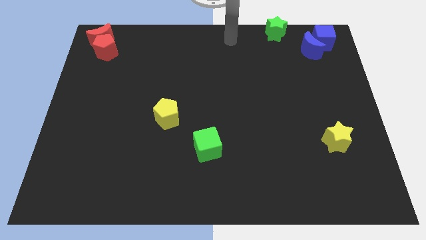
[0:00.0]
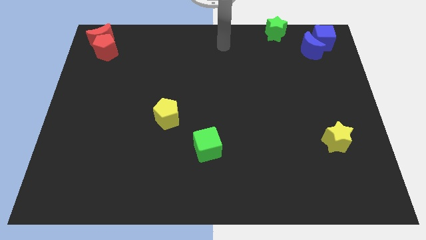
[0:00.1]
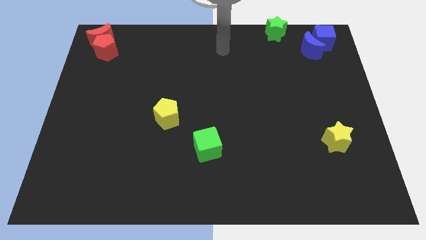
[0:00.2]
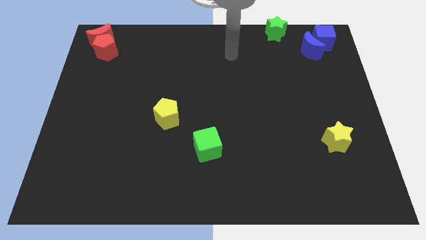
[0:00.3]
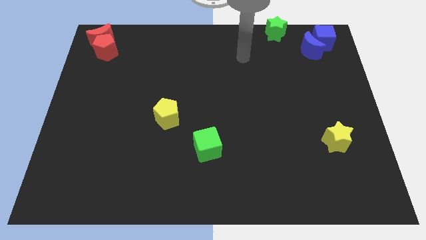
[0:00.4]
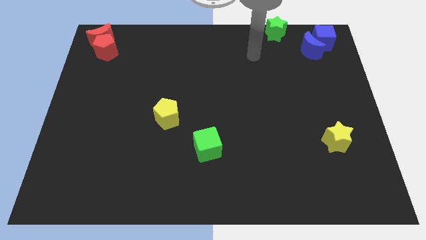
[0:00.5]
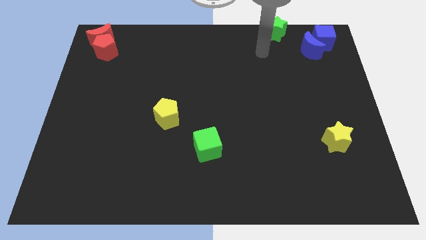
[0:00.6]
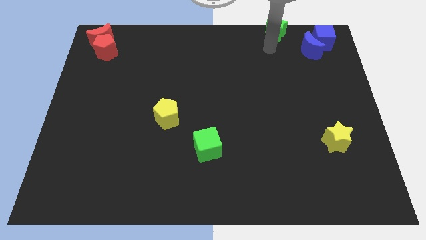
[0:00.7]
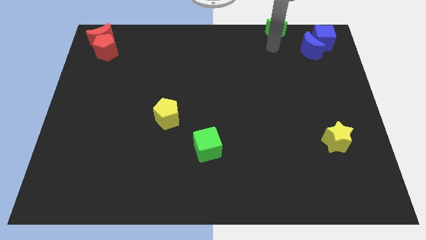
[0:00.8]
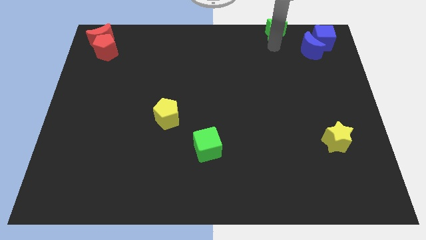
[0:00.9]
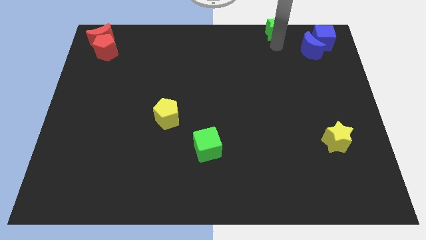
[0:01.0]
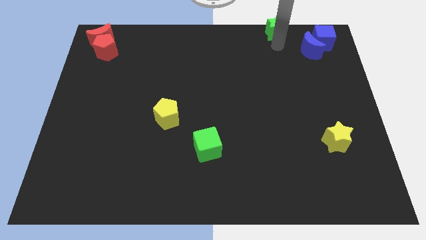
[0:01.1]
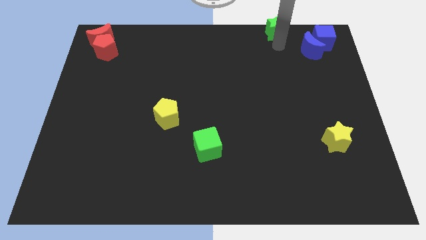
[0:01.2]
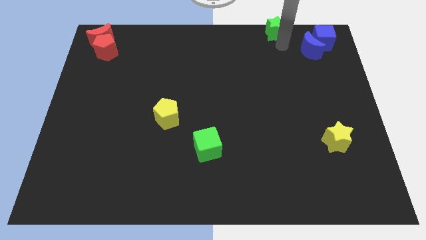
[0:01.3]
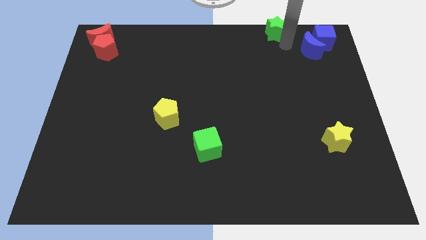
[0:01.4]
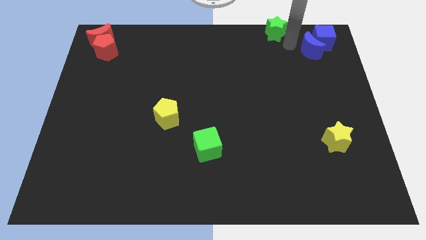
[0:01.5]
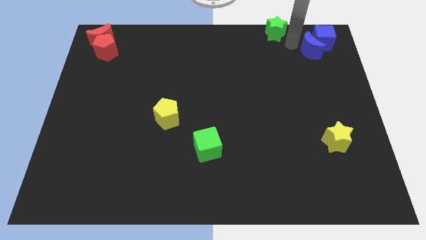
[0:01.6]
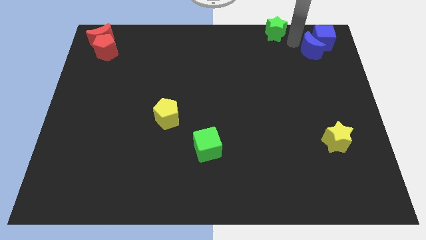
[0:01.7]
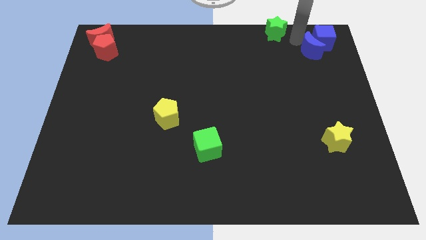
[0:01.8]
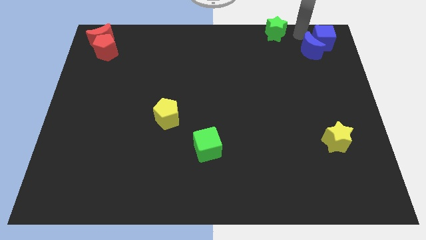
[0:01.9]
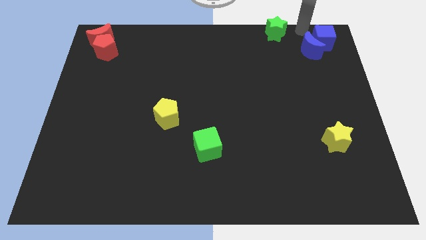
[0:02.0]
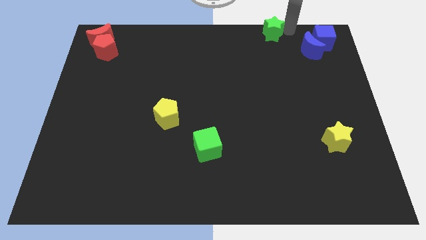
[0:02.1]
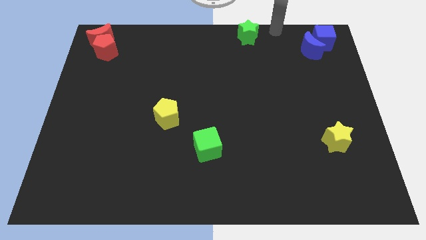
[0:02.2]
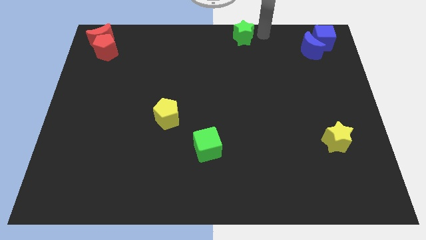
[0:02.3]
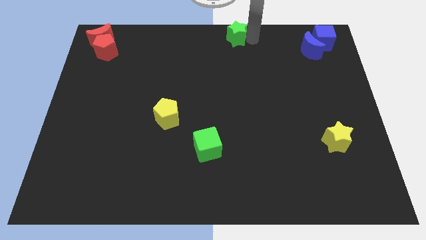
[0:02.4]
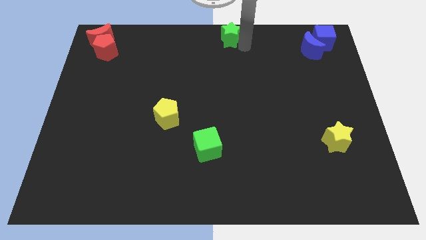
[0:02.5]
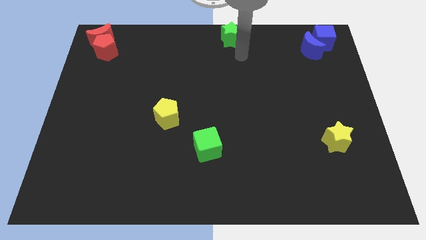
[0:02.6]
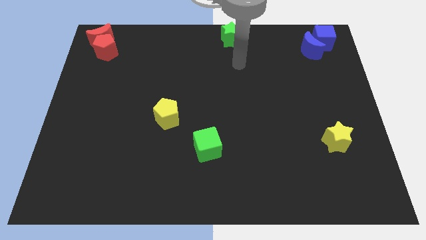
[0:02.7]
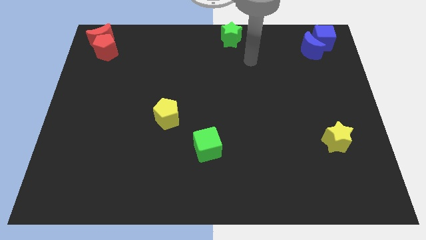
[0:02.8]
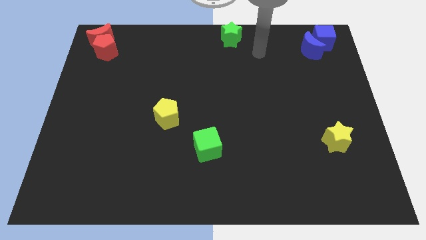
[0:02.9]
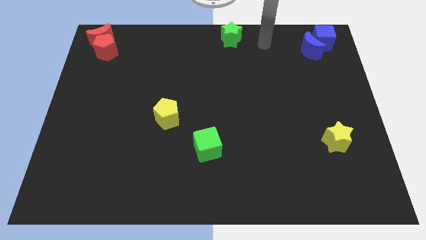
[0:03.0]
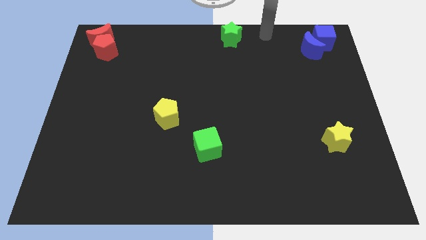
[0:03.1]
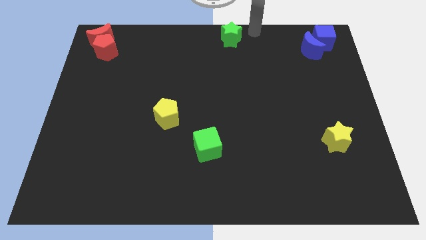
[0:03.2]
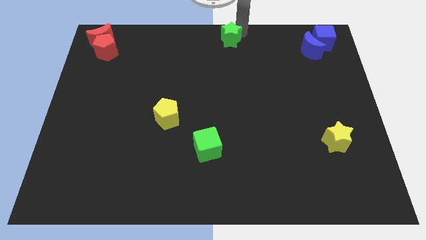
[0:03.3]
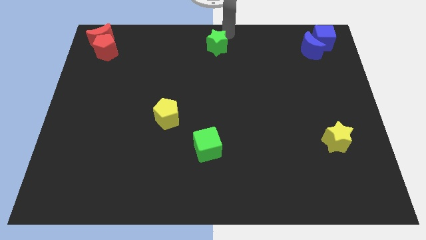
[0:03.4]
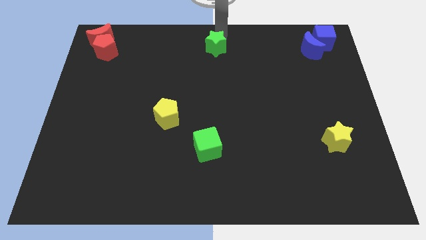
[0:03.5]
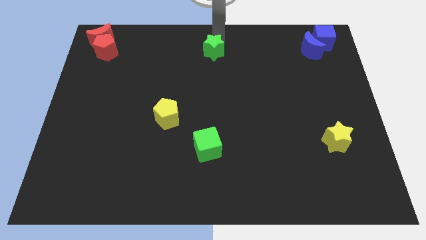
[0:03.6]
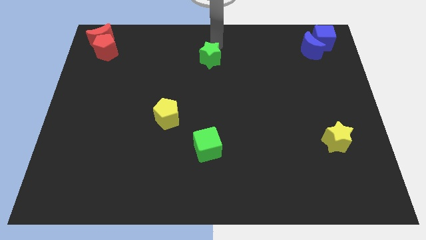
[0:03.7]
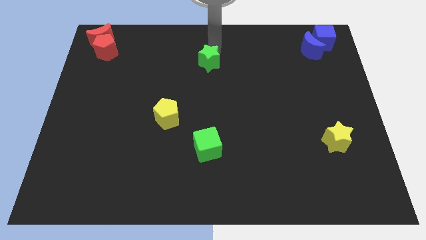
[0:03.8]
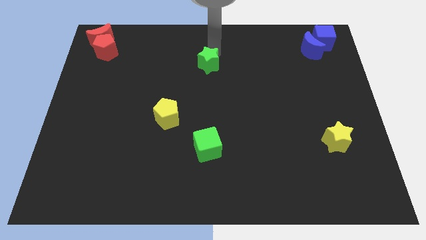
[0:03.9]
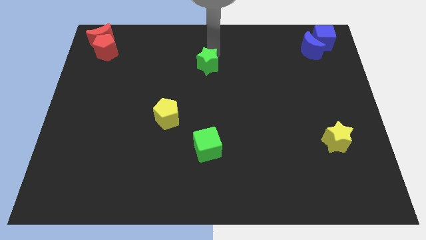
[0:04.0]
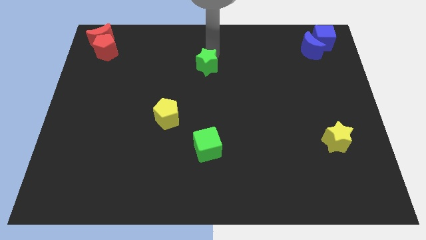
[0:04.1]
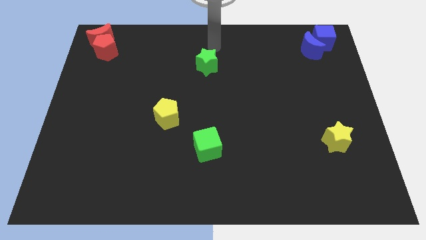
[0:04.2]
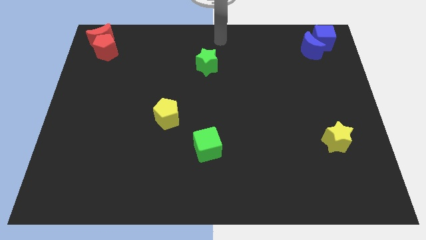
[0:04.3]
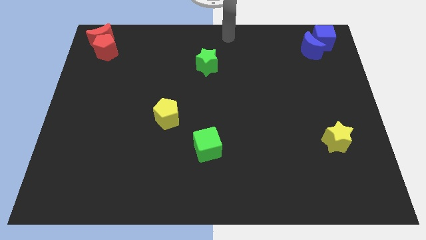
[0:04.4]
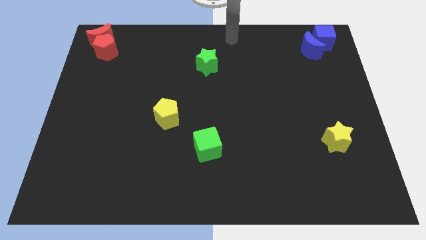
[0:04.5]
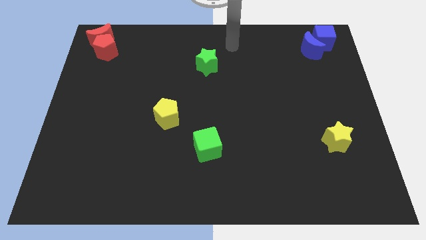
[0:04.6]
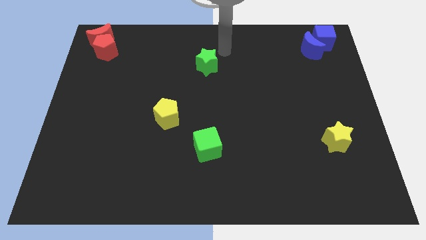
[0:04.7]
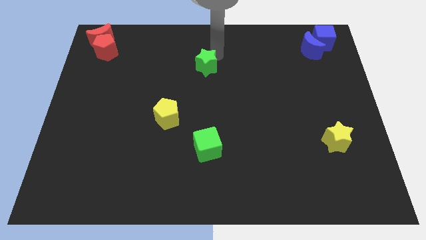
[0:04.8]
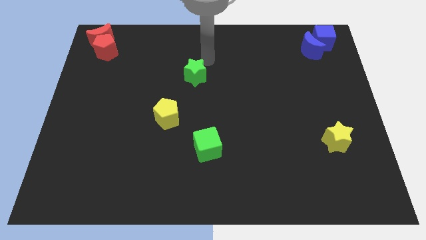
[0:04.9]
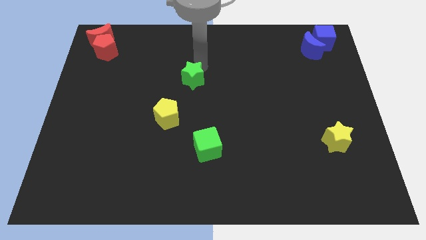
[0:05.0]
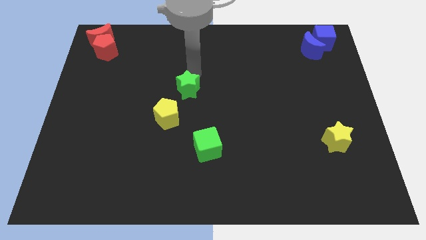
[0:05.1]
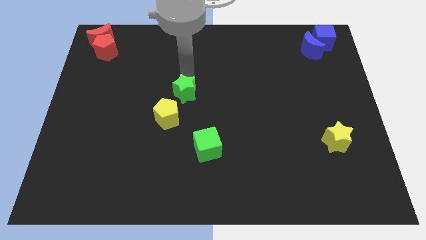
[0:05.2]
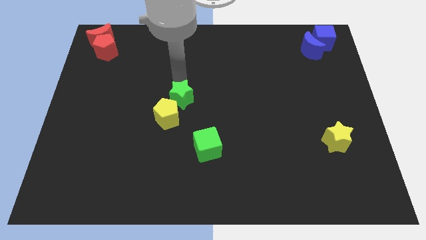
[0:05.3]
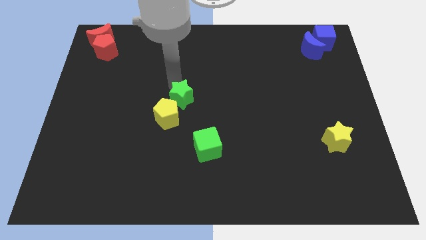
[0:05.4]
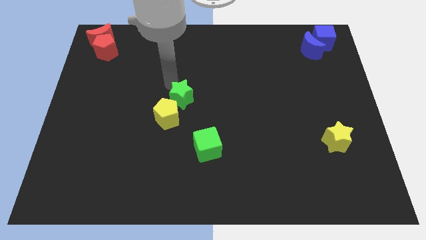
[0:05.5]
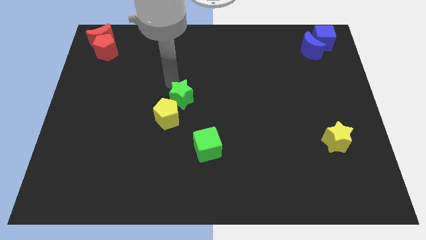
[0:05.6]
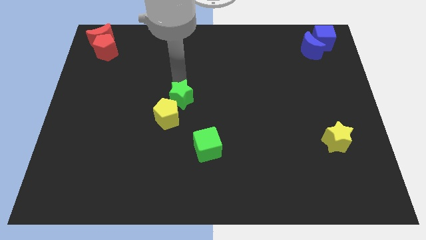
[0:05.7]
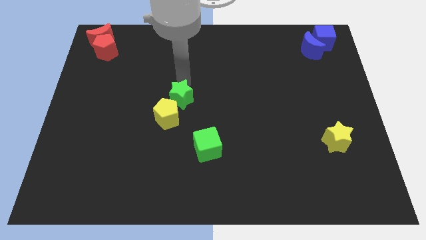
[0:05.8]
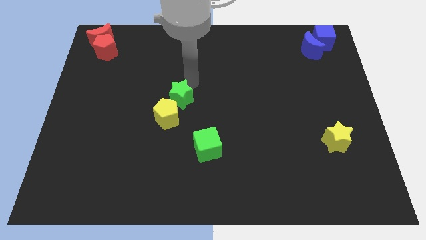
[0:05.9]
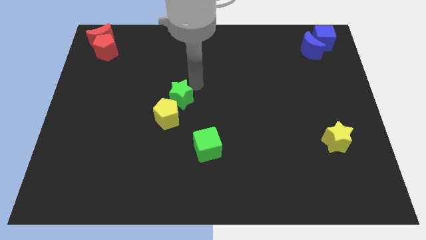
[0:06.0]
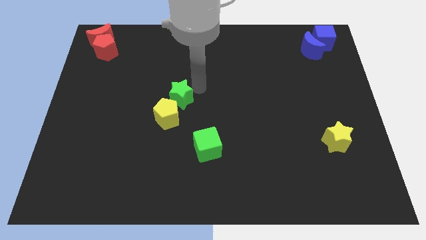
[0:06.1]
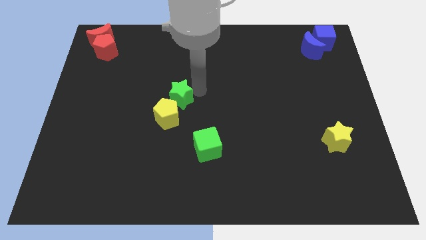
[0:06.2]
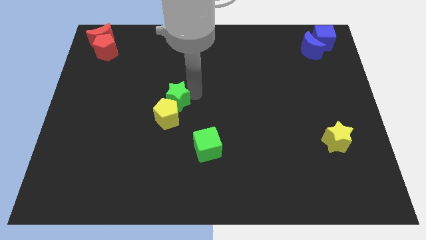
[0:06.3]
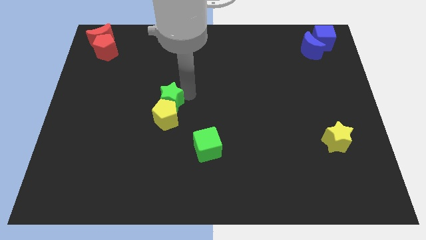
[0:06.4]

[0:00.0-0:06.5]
push the green star into the yellow pentagon

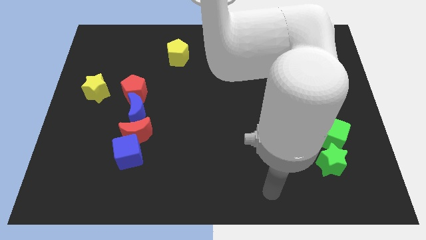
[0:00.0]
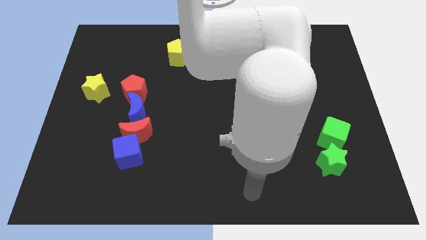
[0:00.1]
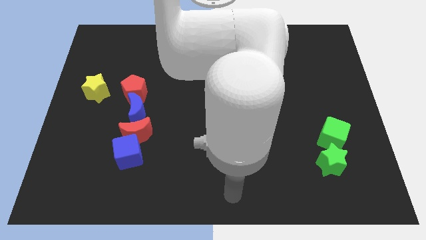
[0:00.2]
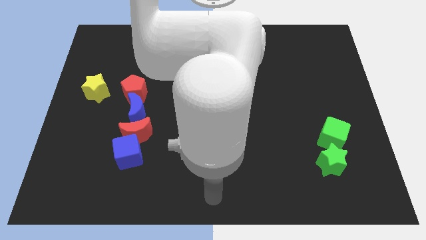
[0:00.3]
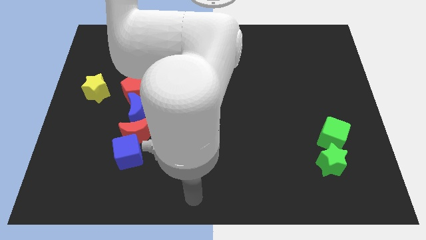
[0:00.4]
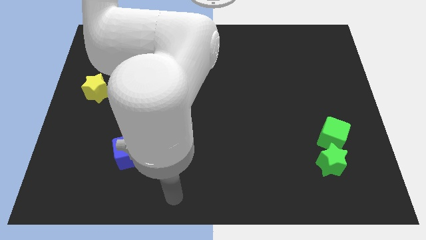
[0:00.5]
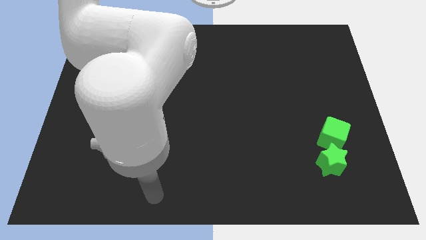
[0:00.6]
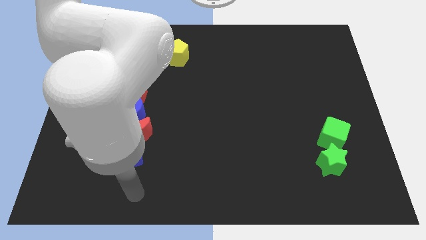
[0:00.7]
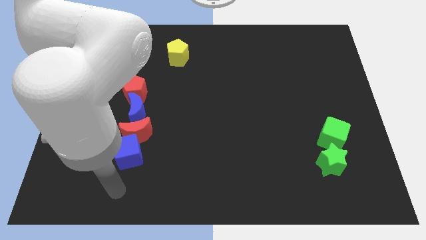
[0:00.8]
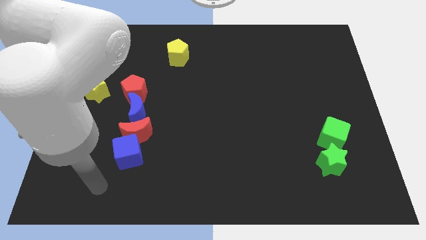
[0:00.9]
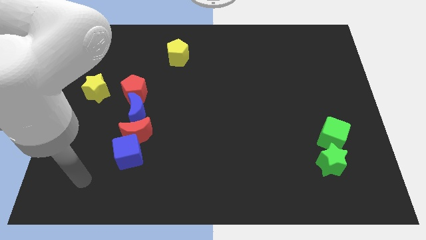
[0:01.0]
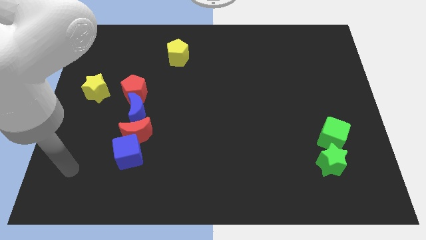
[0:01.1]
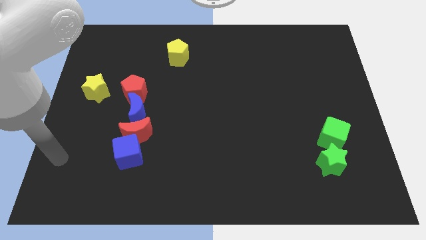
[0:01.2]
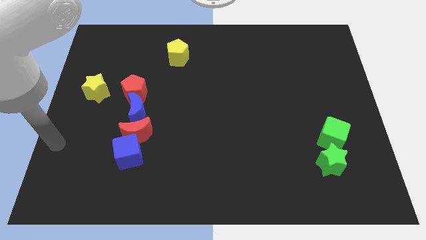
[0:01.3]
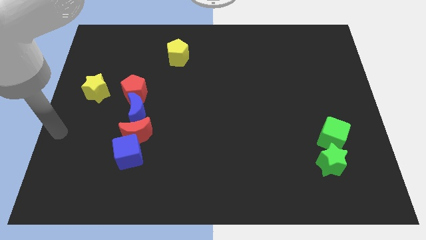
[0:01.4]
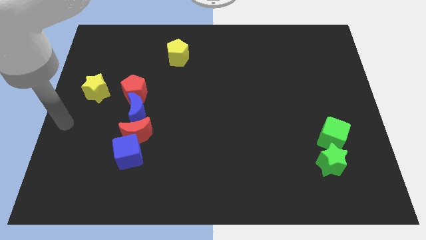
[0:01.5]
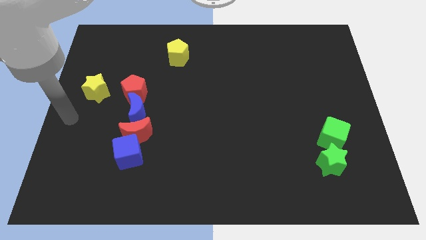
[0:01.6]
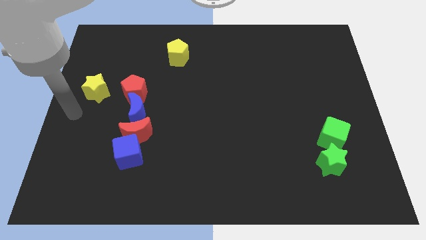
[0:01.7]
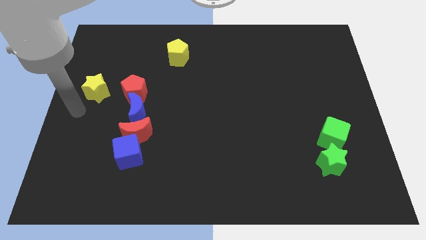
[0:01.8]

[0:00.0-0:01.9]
point your arm at the bottom left of the yellow star

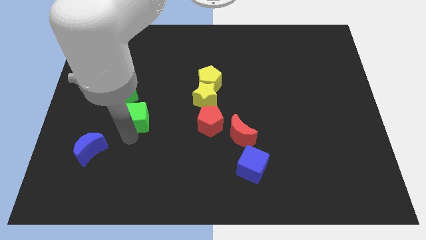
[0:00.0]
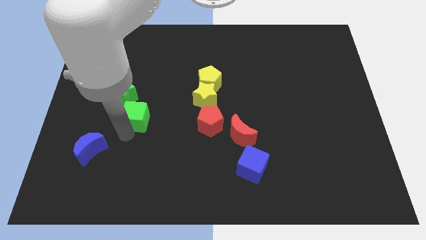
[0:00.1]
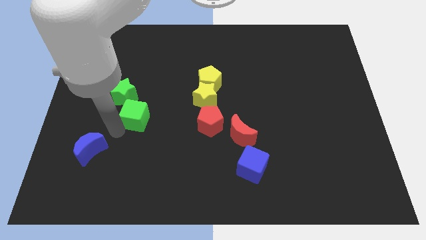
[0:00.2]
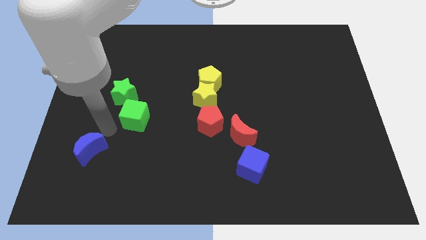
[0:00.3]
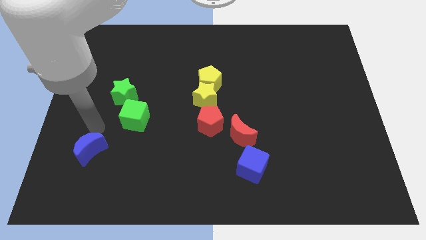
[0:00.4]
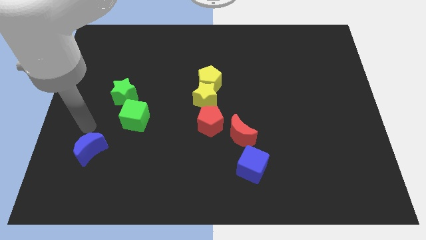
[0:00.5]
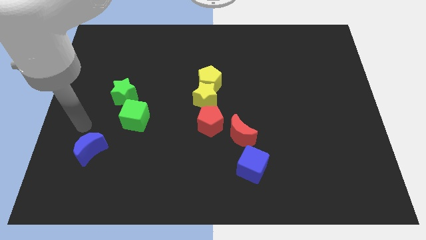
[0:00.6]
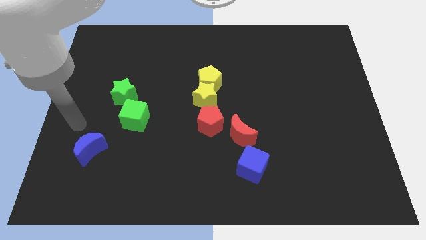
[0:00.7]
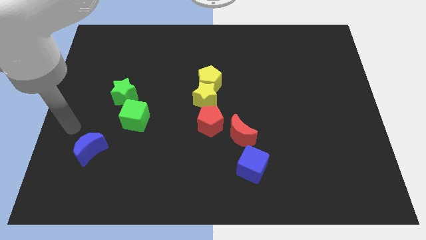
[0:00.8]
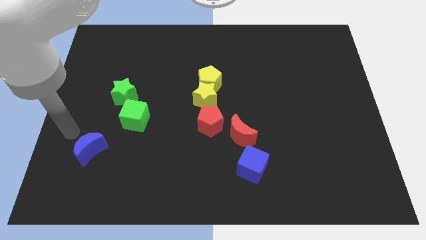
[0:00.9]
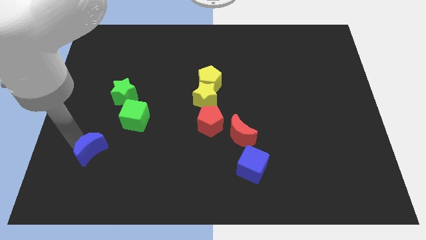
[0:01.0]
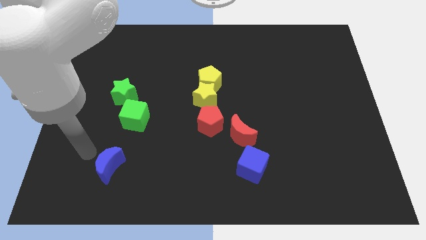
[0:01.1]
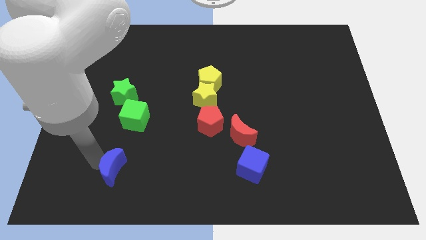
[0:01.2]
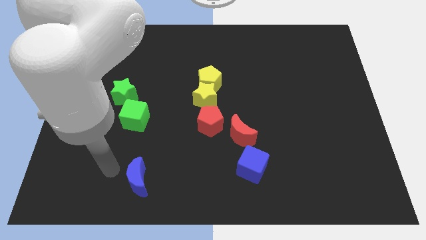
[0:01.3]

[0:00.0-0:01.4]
place blue moon at the bottom of the green cube
